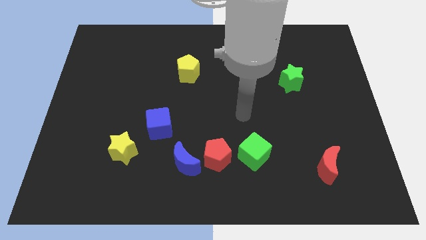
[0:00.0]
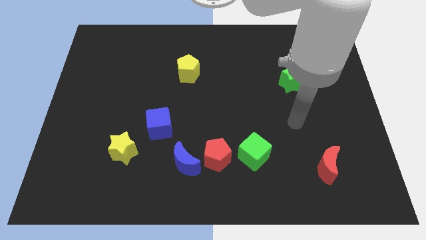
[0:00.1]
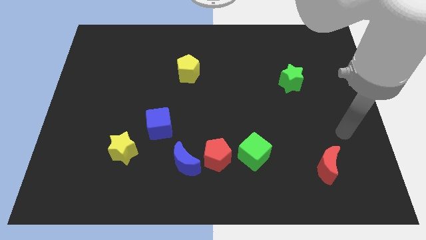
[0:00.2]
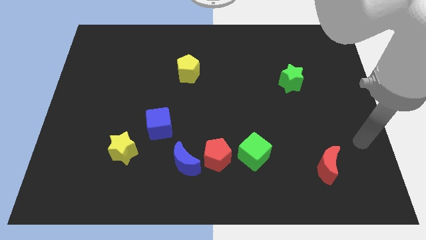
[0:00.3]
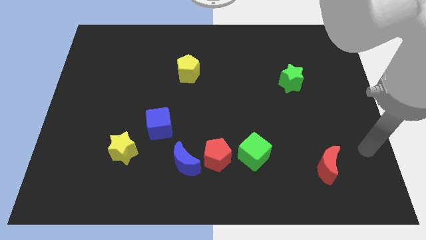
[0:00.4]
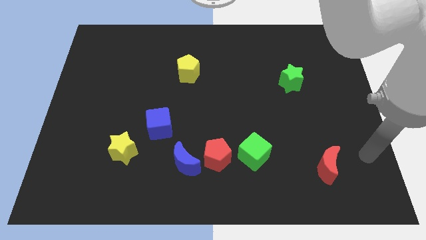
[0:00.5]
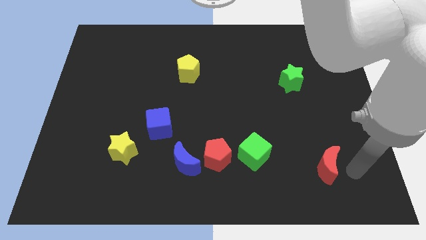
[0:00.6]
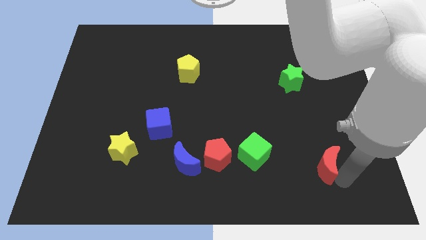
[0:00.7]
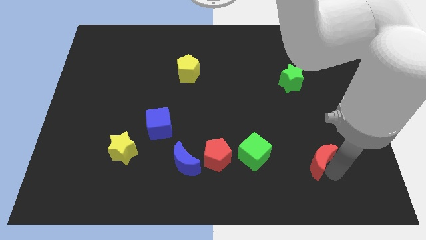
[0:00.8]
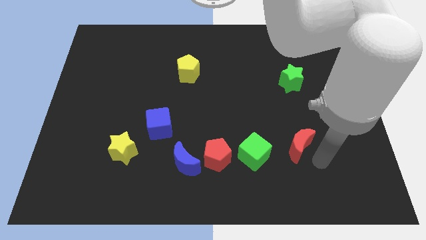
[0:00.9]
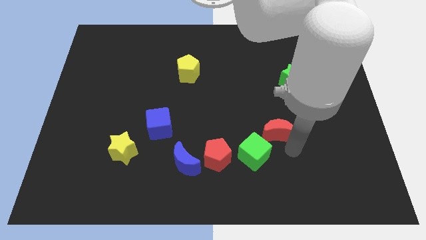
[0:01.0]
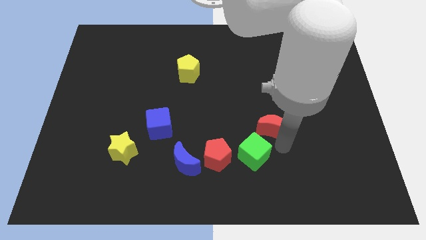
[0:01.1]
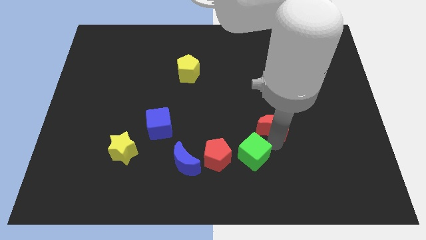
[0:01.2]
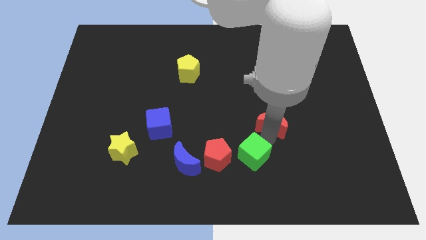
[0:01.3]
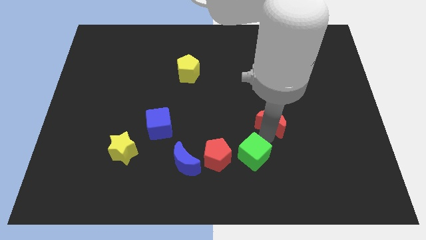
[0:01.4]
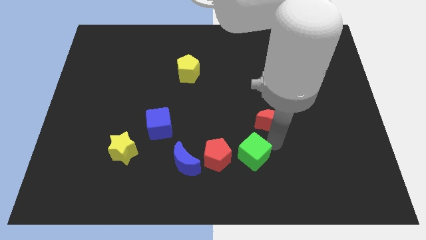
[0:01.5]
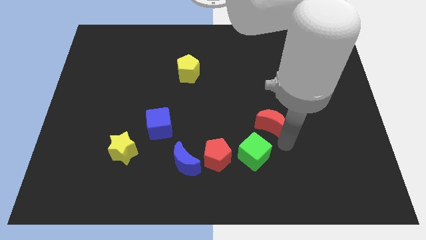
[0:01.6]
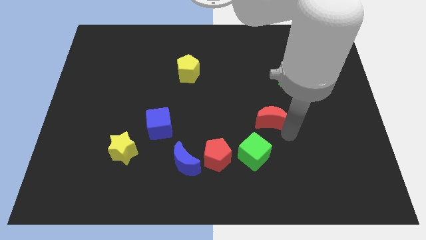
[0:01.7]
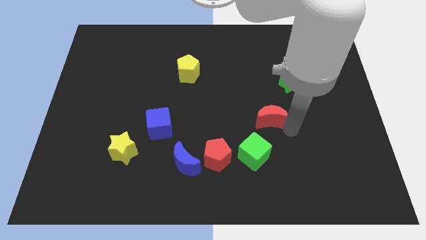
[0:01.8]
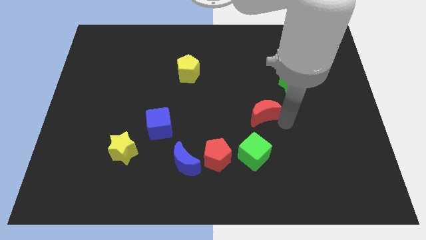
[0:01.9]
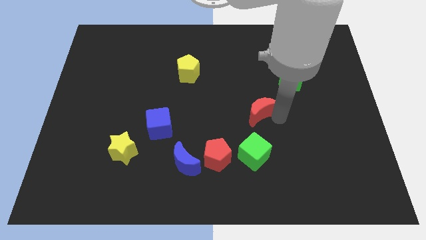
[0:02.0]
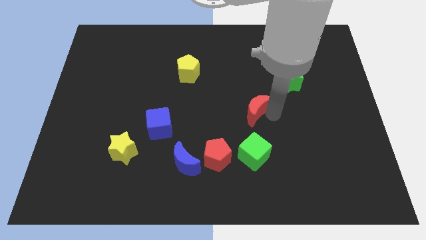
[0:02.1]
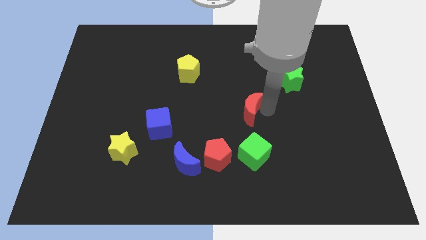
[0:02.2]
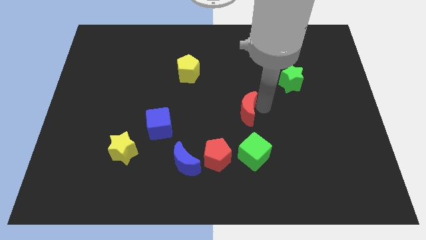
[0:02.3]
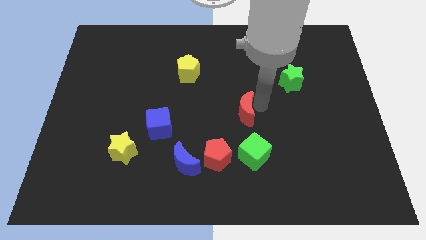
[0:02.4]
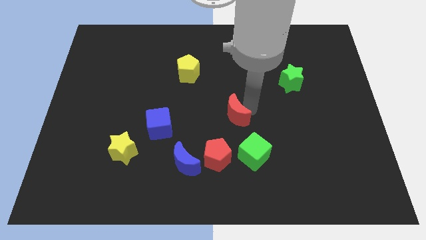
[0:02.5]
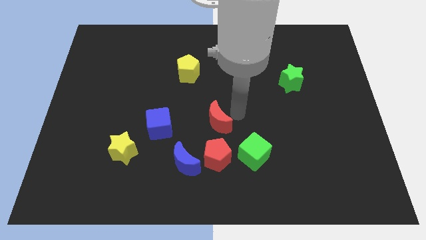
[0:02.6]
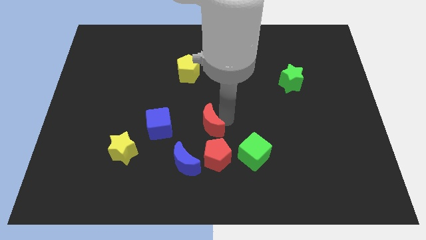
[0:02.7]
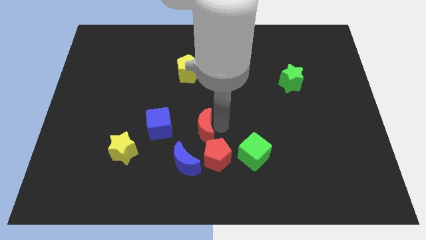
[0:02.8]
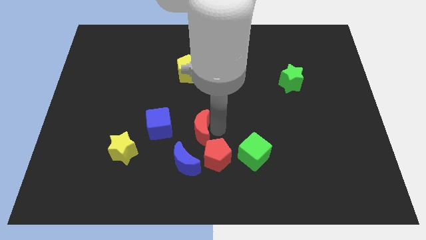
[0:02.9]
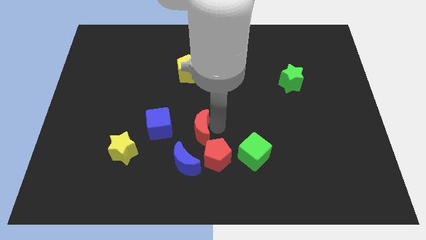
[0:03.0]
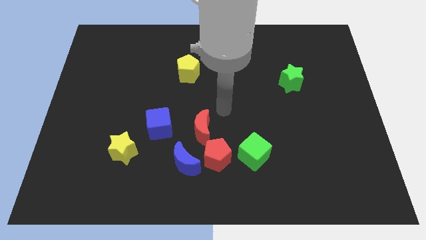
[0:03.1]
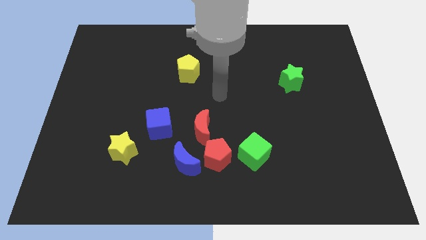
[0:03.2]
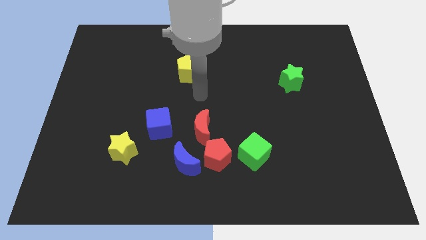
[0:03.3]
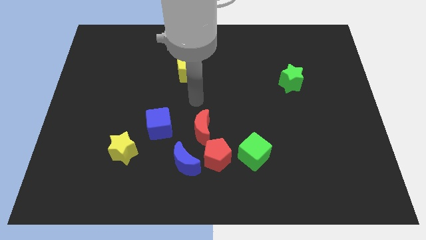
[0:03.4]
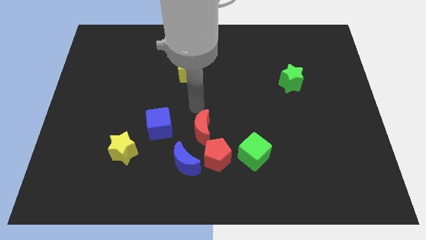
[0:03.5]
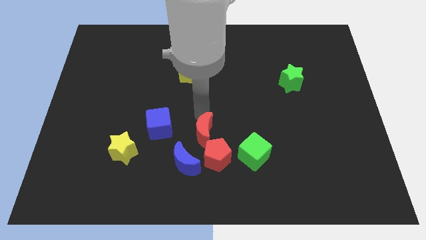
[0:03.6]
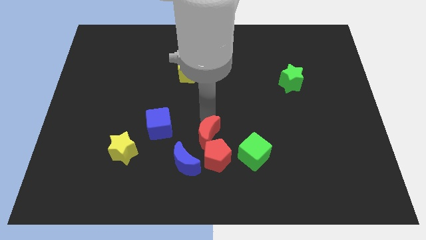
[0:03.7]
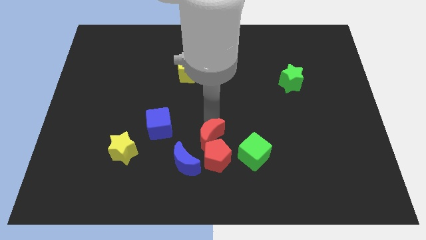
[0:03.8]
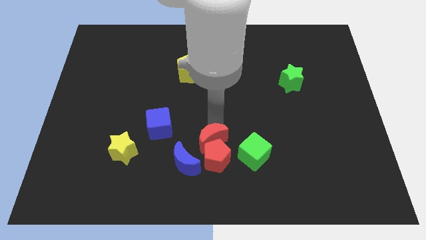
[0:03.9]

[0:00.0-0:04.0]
push the red moon next to the red pentagon

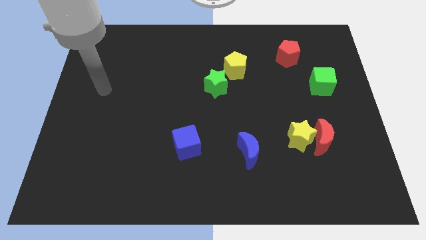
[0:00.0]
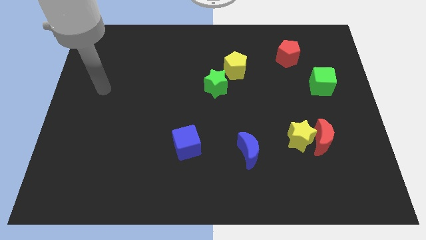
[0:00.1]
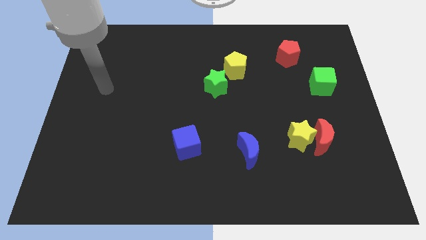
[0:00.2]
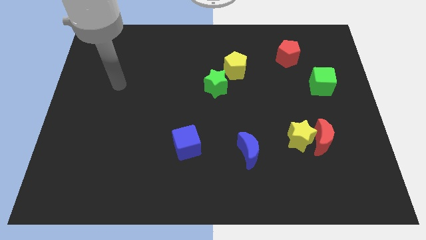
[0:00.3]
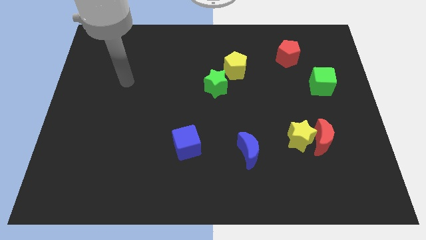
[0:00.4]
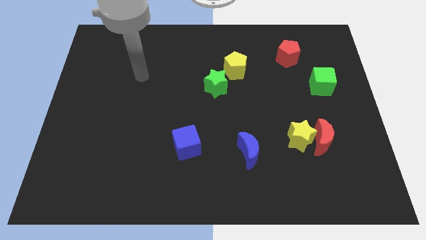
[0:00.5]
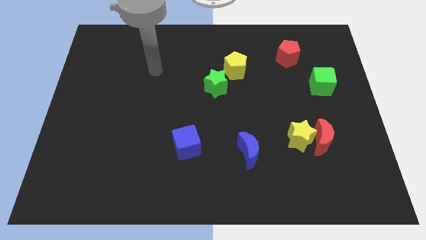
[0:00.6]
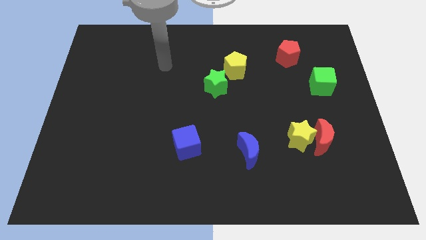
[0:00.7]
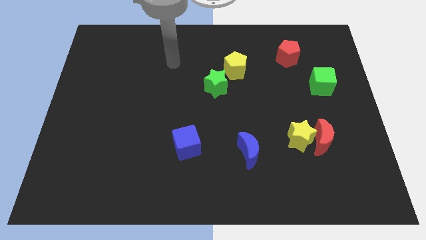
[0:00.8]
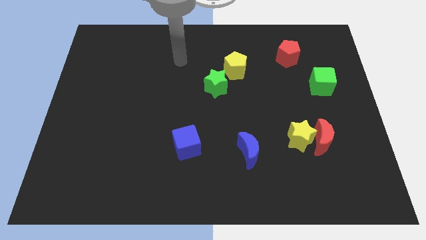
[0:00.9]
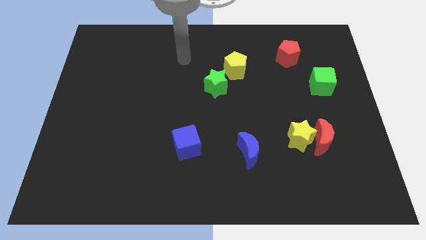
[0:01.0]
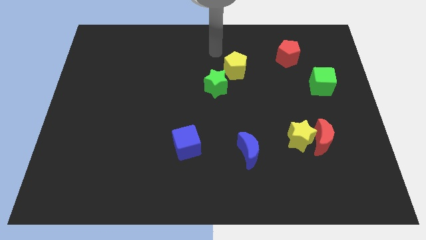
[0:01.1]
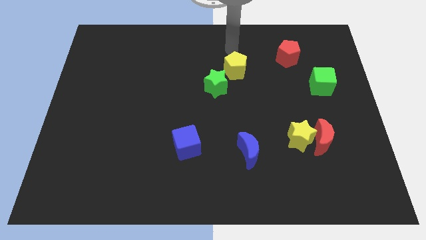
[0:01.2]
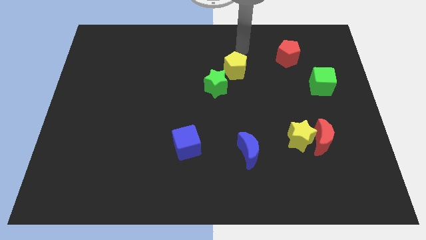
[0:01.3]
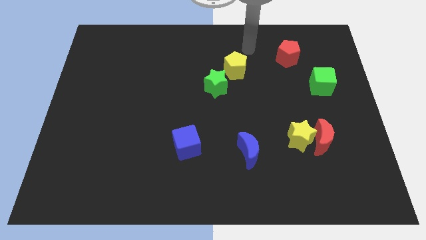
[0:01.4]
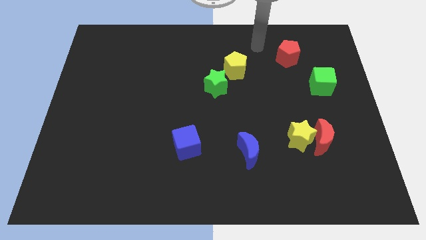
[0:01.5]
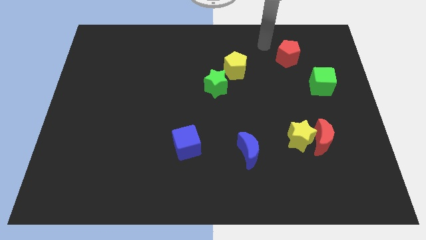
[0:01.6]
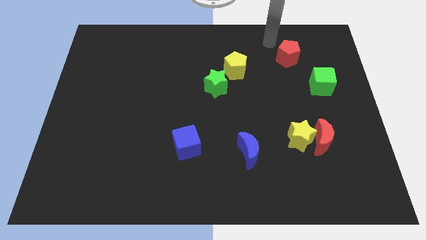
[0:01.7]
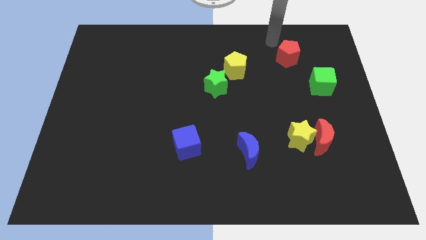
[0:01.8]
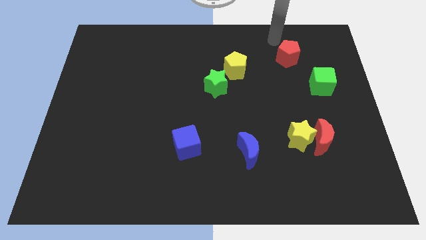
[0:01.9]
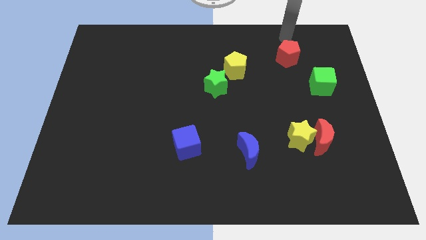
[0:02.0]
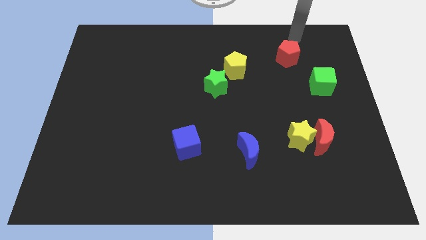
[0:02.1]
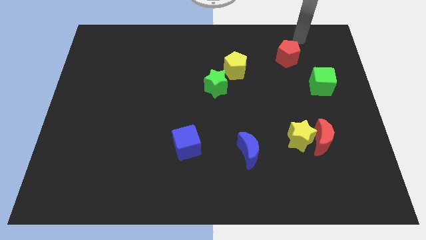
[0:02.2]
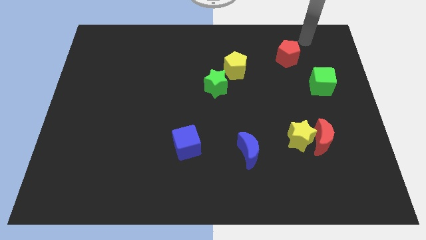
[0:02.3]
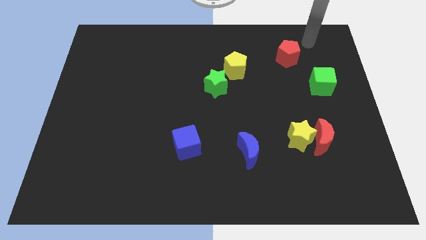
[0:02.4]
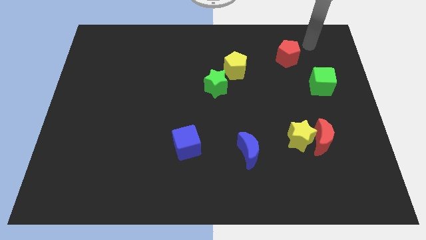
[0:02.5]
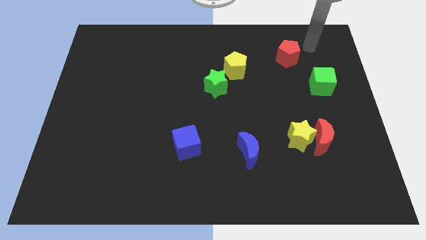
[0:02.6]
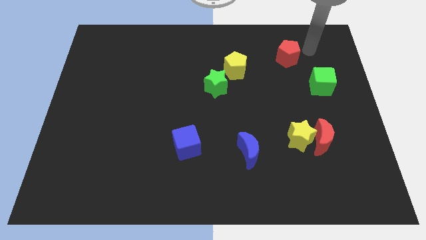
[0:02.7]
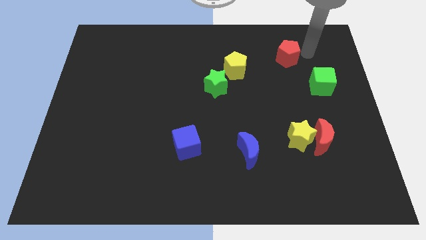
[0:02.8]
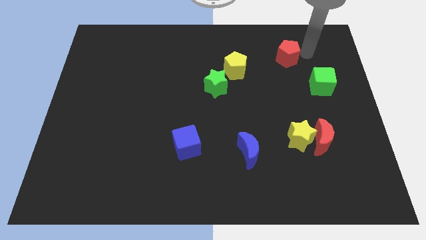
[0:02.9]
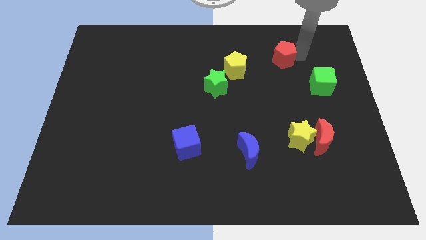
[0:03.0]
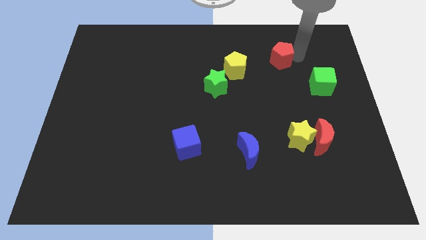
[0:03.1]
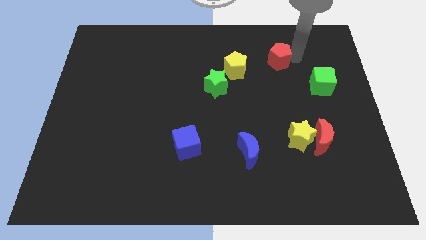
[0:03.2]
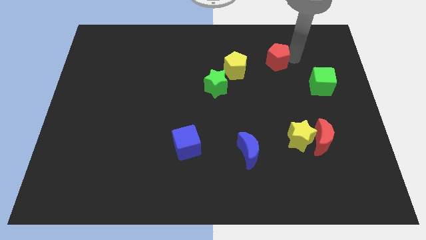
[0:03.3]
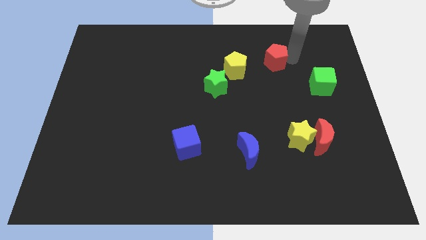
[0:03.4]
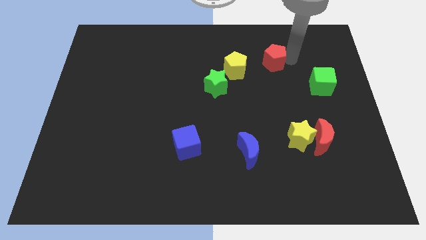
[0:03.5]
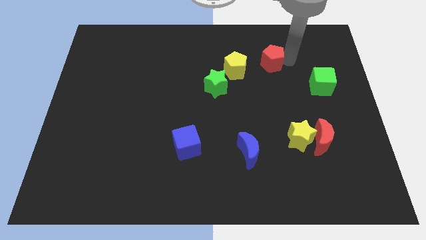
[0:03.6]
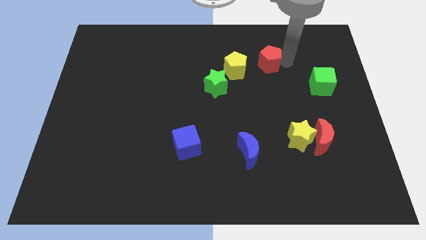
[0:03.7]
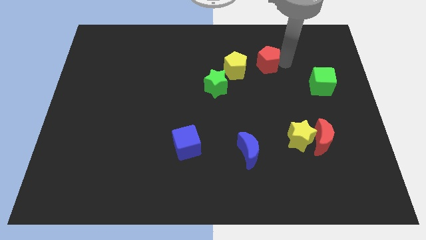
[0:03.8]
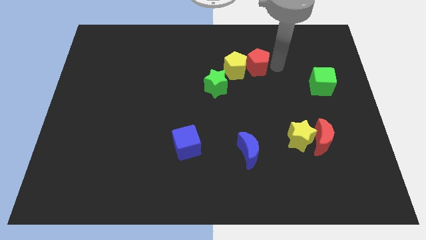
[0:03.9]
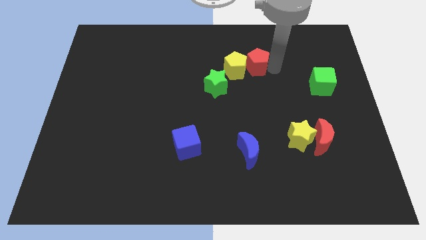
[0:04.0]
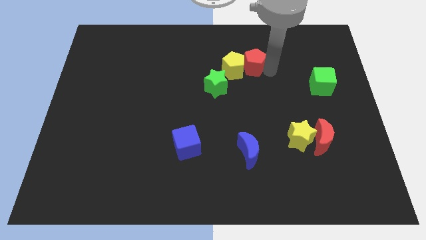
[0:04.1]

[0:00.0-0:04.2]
put the red pentagon next to the yellow pentagon
